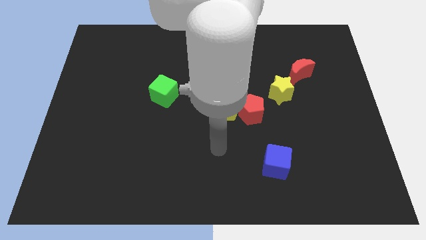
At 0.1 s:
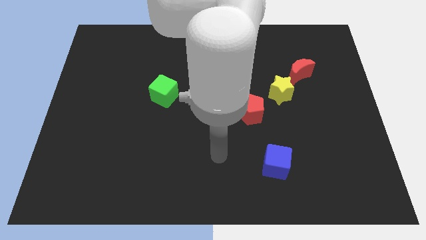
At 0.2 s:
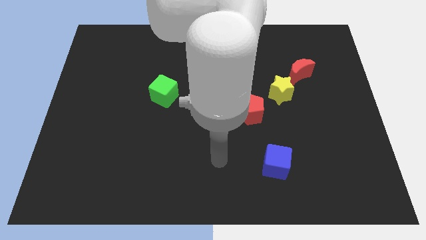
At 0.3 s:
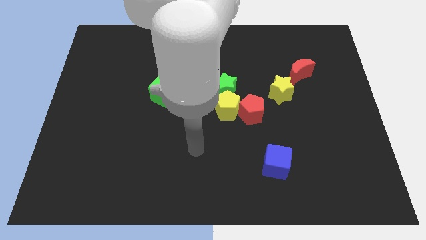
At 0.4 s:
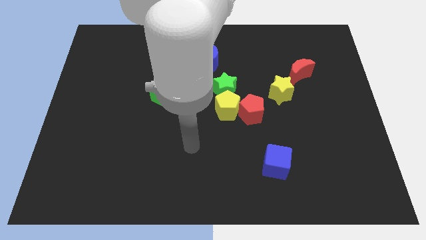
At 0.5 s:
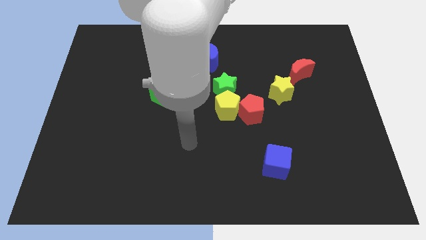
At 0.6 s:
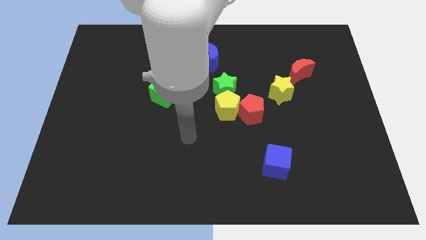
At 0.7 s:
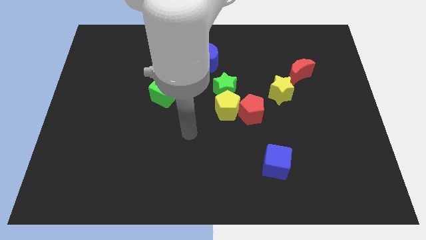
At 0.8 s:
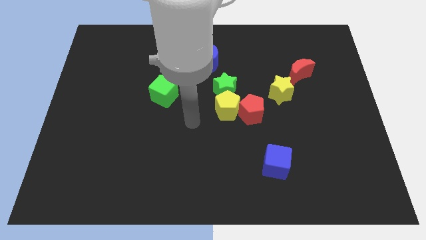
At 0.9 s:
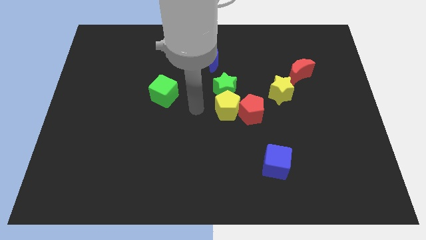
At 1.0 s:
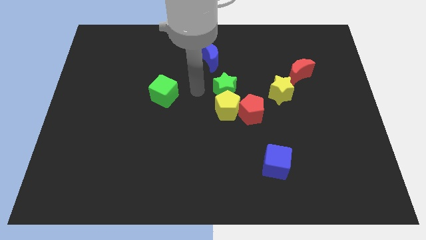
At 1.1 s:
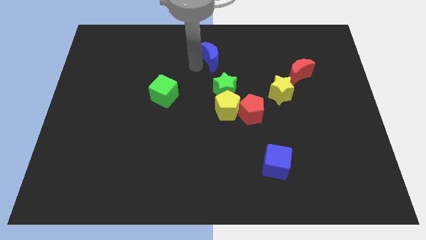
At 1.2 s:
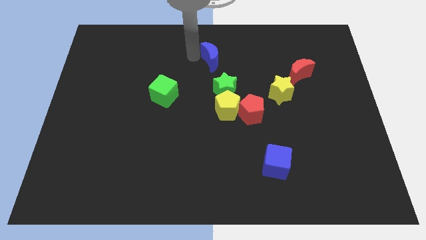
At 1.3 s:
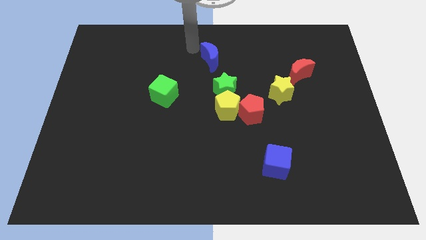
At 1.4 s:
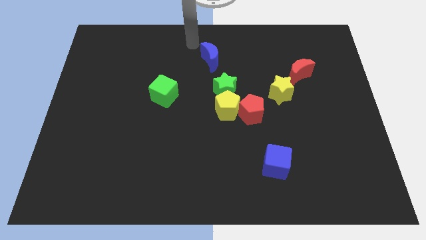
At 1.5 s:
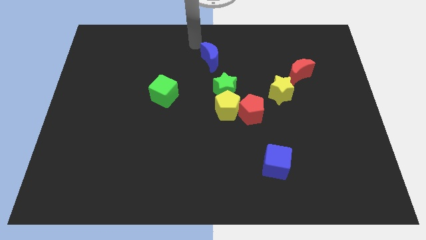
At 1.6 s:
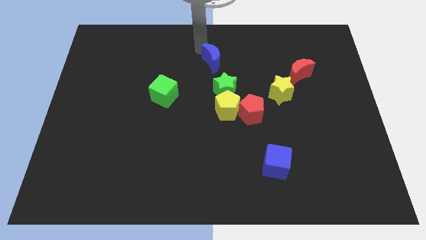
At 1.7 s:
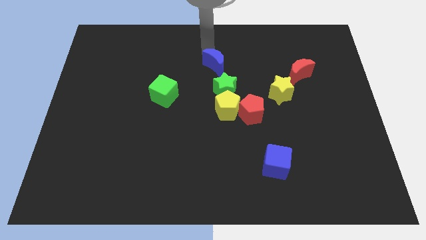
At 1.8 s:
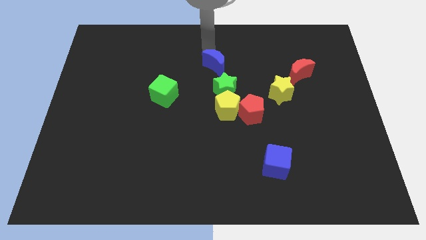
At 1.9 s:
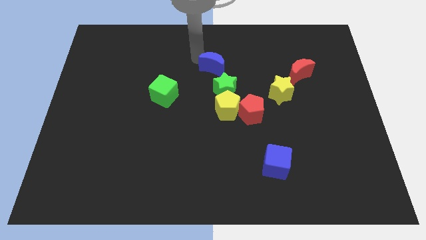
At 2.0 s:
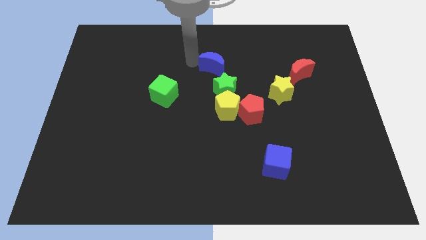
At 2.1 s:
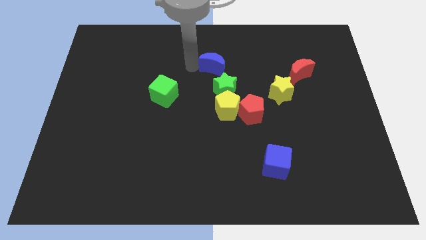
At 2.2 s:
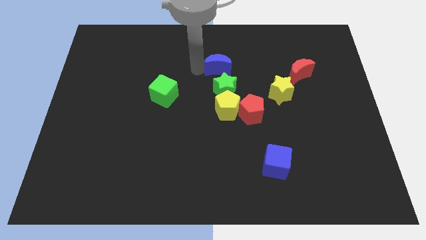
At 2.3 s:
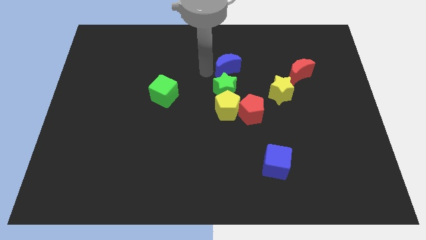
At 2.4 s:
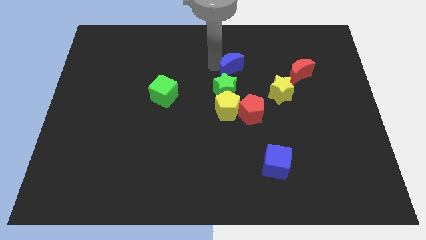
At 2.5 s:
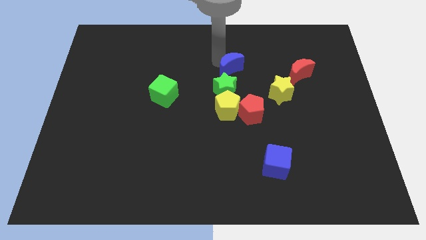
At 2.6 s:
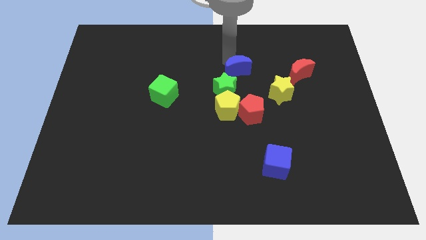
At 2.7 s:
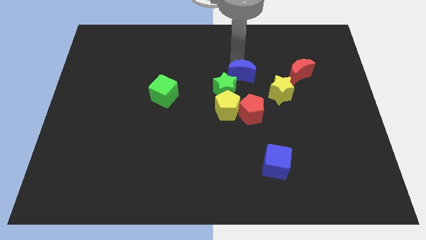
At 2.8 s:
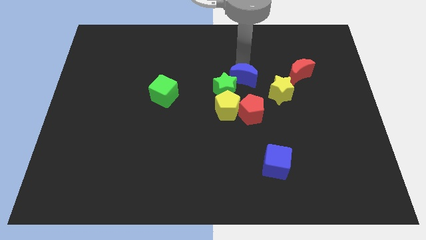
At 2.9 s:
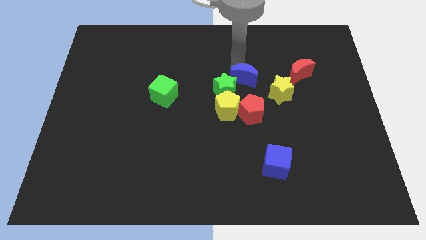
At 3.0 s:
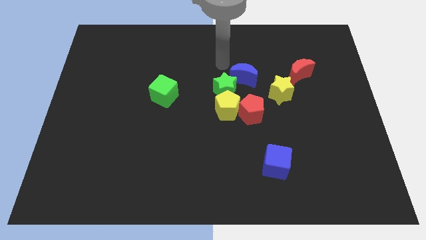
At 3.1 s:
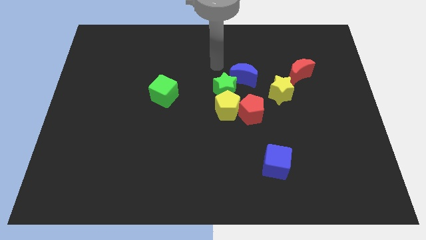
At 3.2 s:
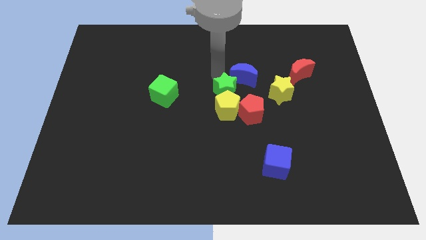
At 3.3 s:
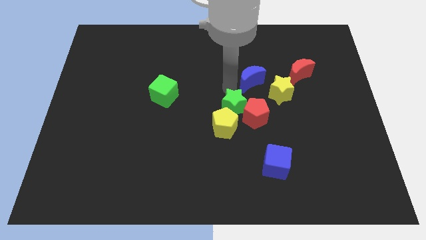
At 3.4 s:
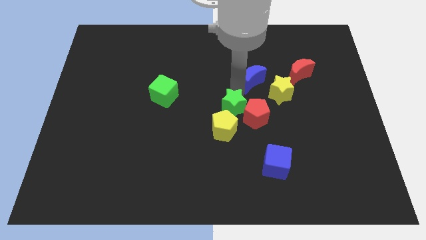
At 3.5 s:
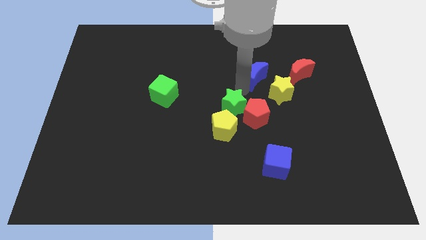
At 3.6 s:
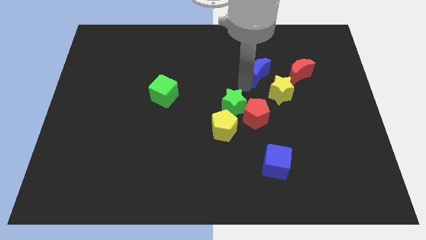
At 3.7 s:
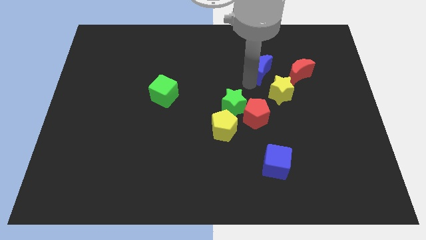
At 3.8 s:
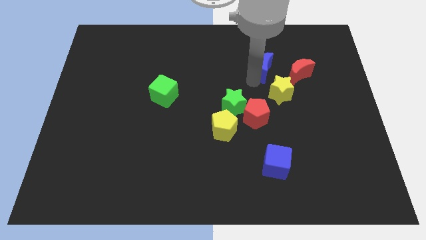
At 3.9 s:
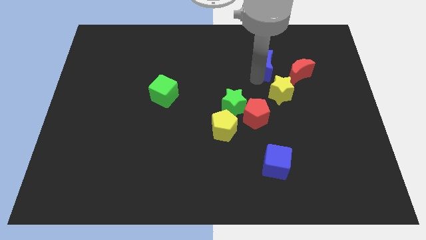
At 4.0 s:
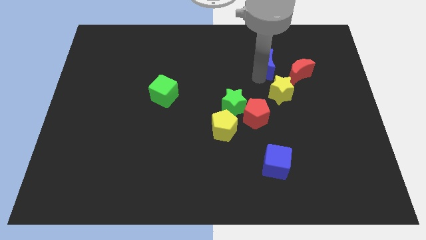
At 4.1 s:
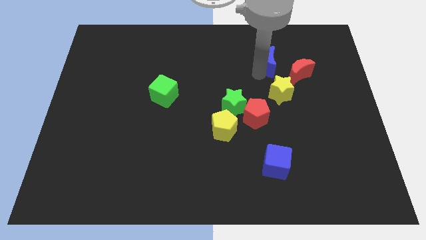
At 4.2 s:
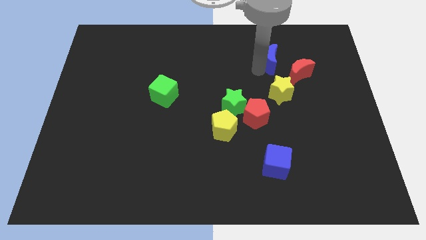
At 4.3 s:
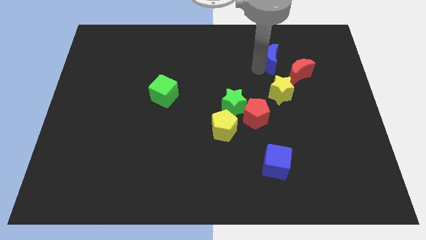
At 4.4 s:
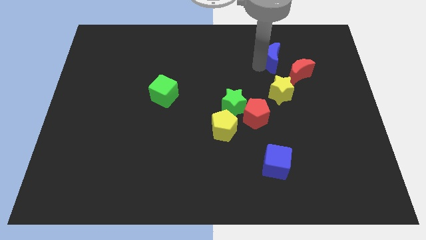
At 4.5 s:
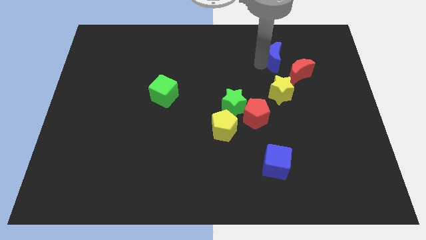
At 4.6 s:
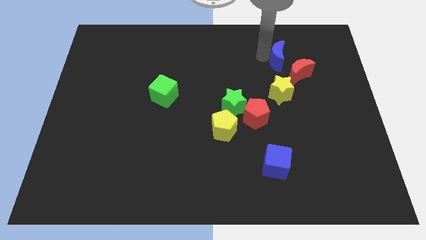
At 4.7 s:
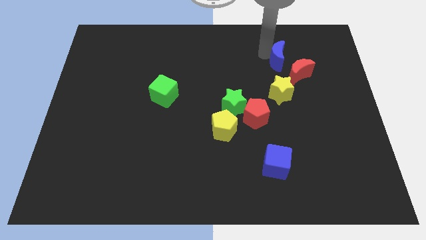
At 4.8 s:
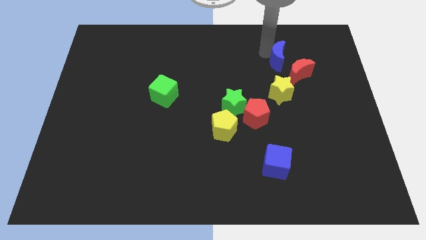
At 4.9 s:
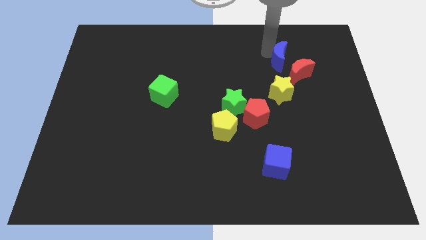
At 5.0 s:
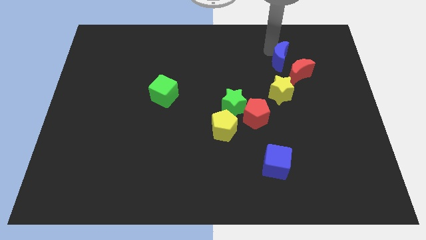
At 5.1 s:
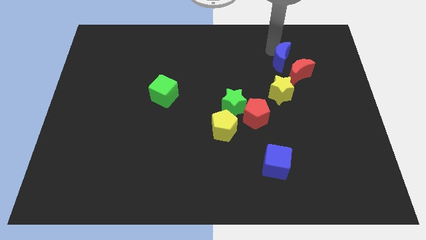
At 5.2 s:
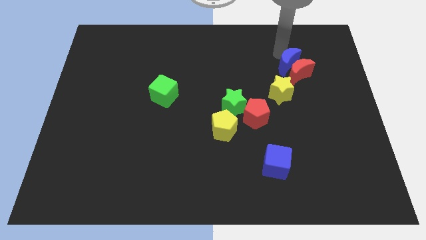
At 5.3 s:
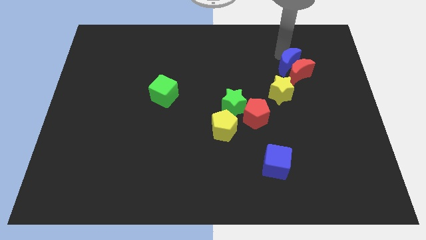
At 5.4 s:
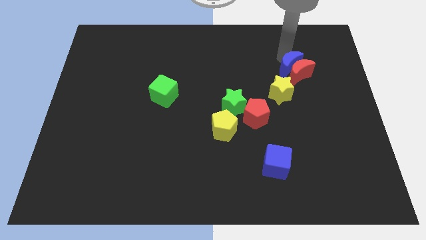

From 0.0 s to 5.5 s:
push the blue moon next to the red moon

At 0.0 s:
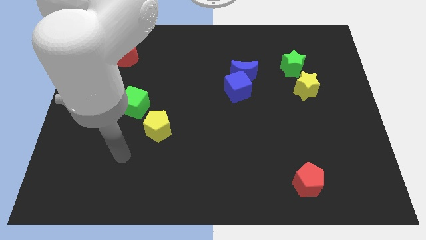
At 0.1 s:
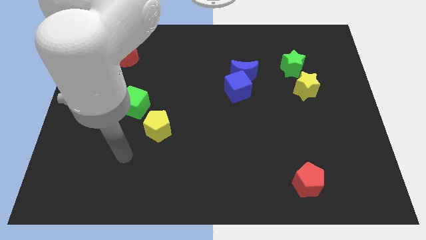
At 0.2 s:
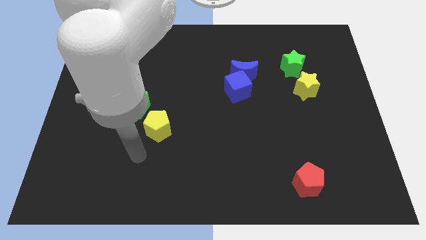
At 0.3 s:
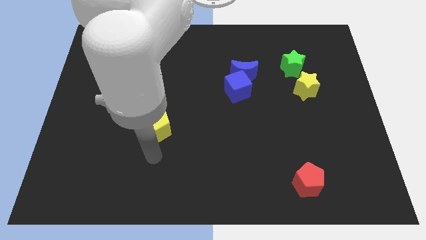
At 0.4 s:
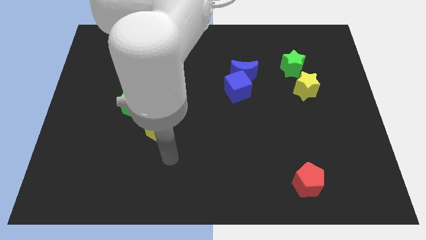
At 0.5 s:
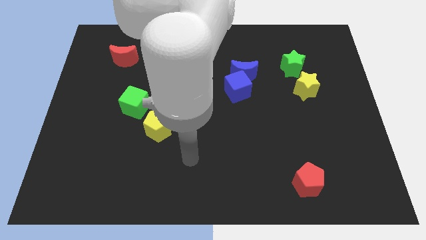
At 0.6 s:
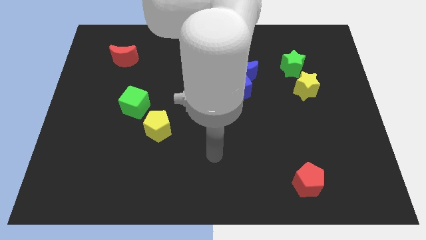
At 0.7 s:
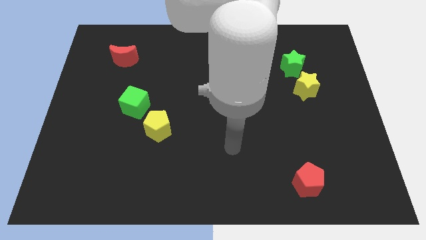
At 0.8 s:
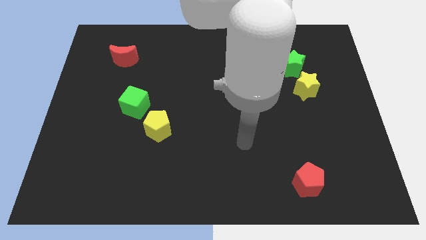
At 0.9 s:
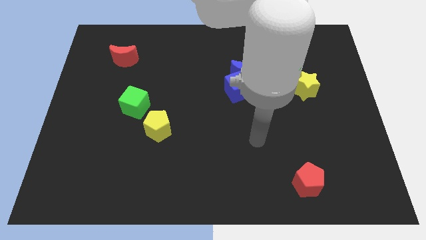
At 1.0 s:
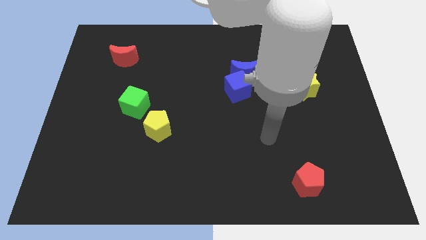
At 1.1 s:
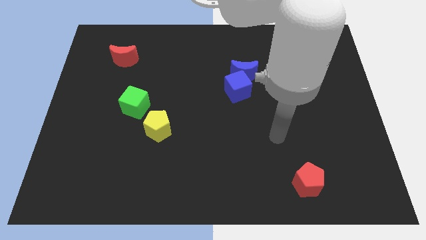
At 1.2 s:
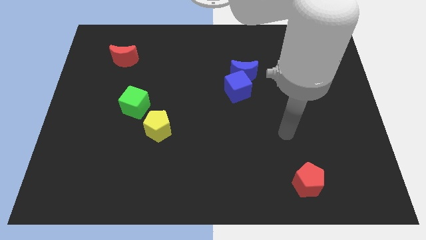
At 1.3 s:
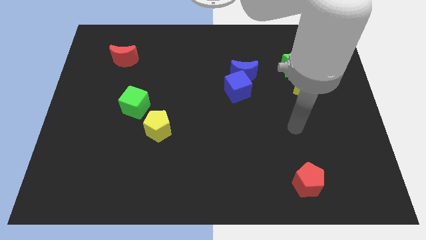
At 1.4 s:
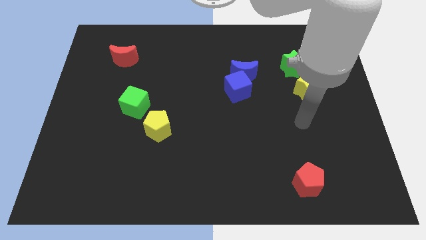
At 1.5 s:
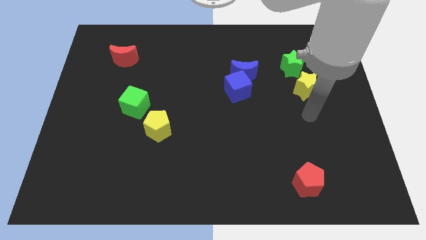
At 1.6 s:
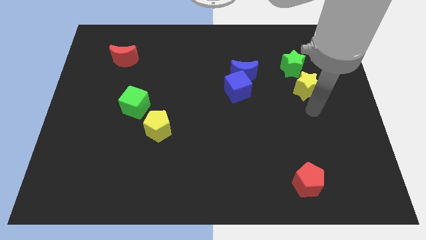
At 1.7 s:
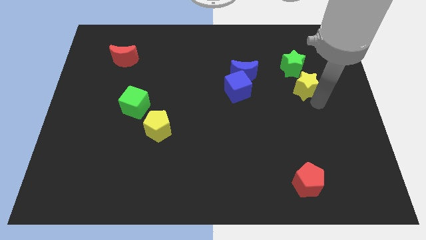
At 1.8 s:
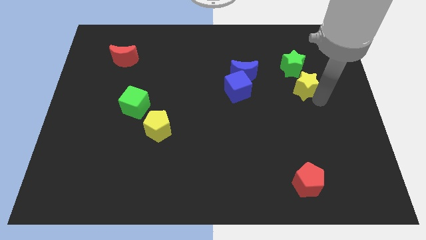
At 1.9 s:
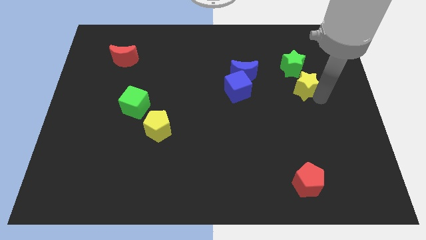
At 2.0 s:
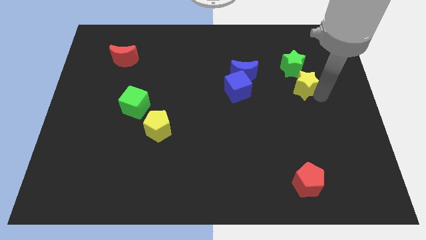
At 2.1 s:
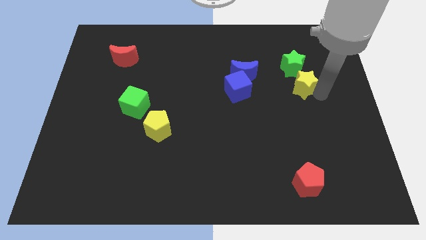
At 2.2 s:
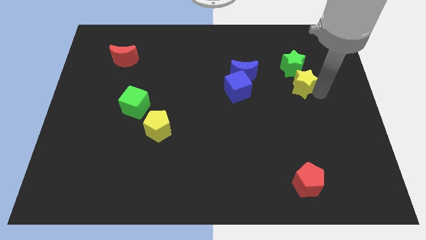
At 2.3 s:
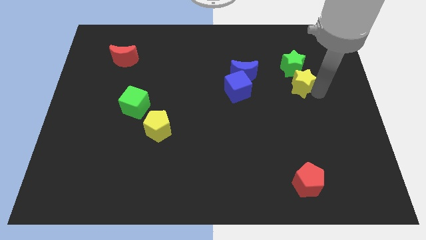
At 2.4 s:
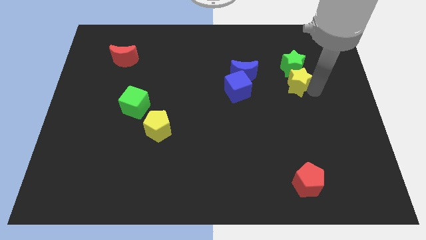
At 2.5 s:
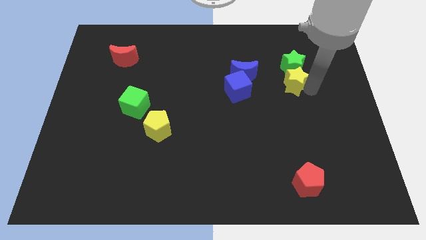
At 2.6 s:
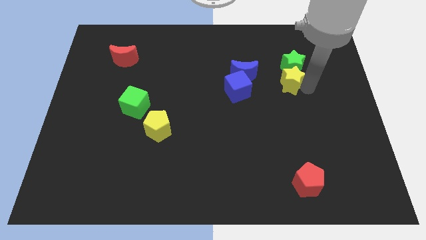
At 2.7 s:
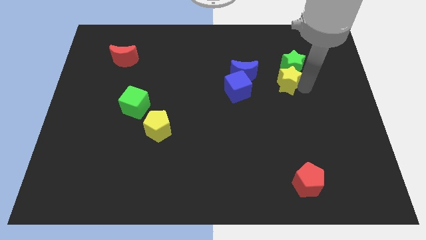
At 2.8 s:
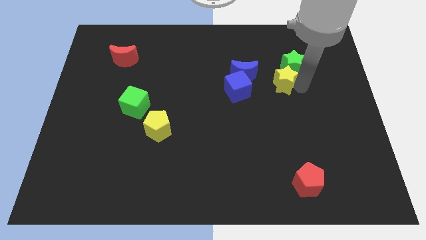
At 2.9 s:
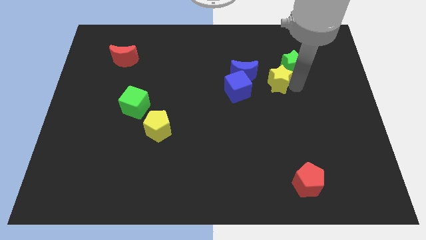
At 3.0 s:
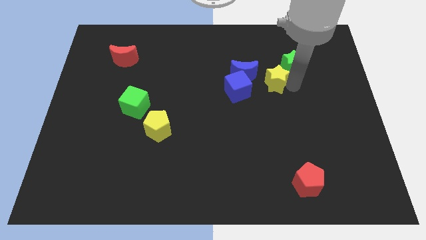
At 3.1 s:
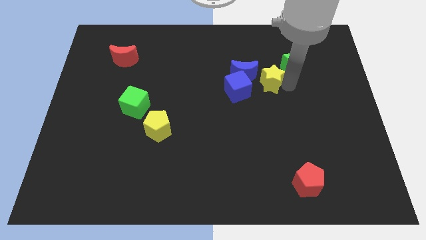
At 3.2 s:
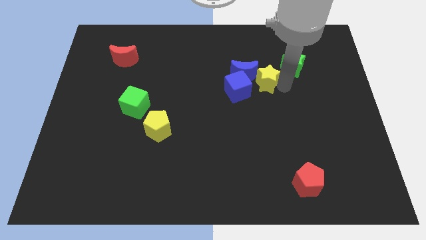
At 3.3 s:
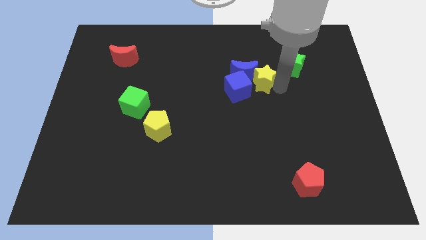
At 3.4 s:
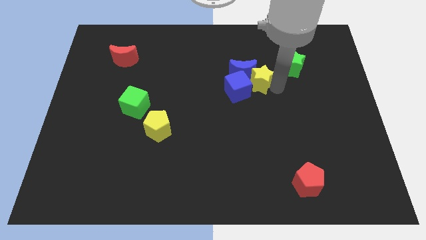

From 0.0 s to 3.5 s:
put the yellow star to the blue moon
